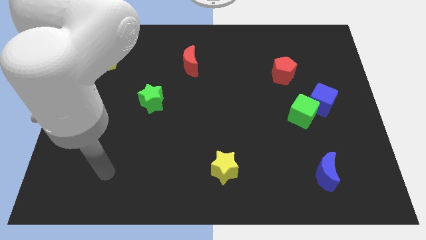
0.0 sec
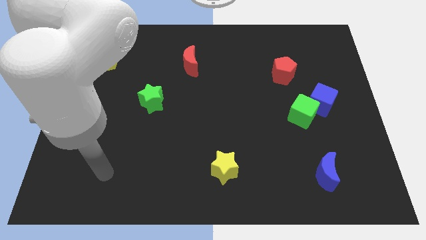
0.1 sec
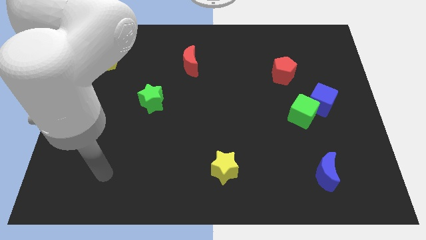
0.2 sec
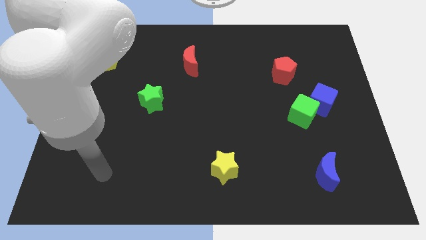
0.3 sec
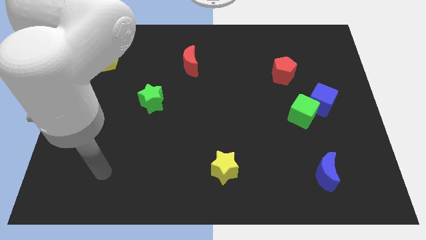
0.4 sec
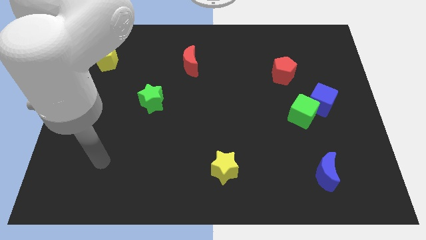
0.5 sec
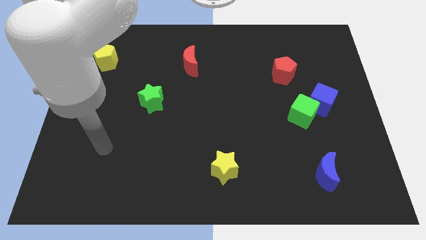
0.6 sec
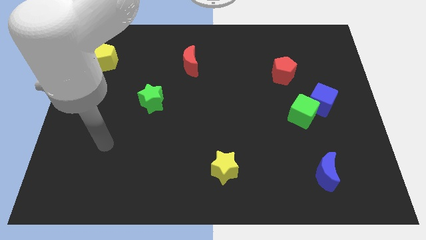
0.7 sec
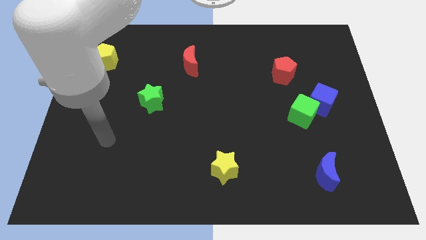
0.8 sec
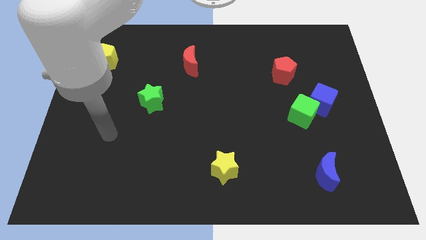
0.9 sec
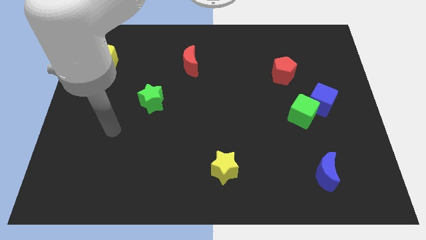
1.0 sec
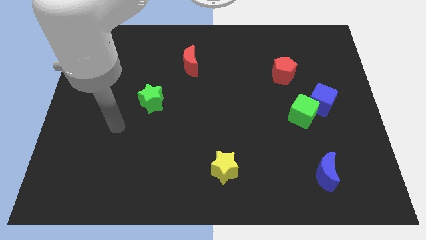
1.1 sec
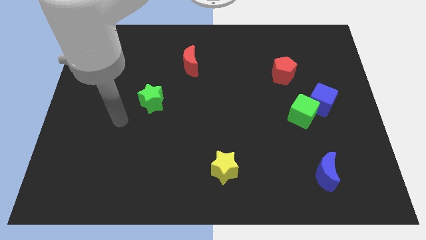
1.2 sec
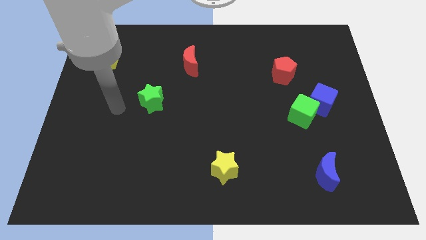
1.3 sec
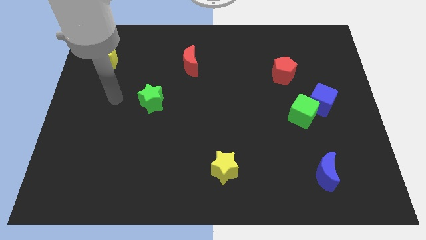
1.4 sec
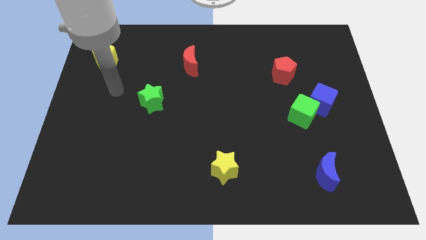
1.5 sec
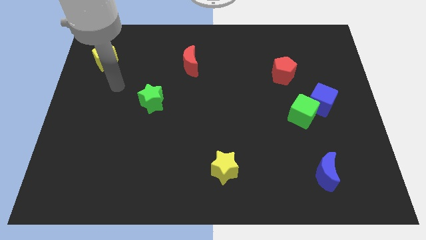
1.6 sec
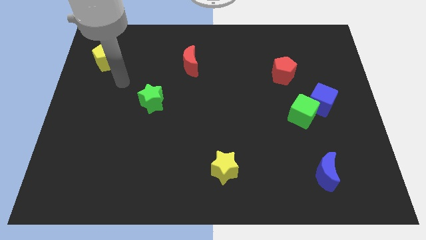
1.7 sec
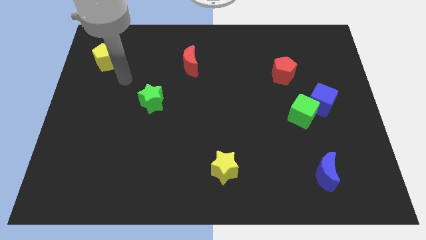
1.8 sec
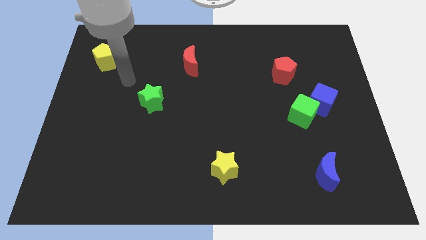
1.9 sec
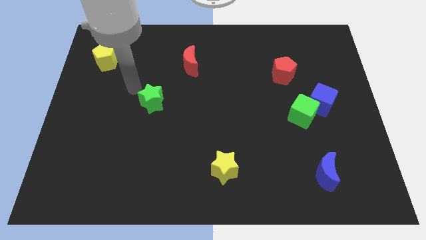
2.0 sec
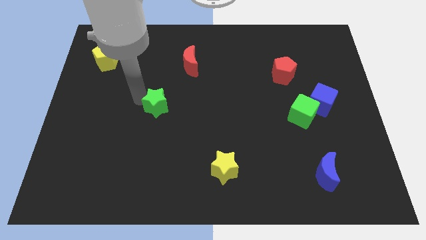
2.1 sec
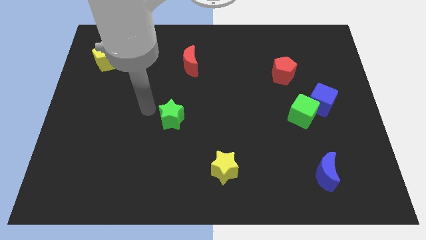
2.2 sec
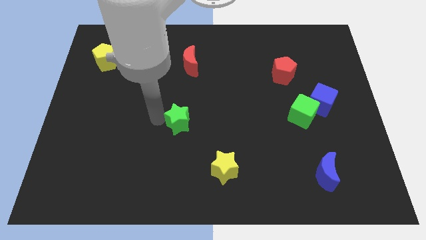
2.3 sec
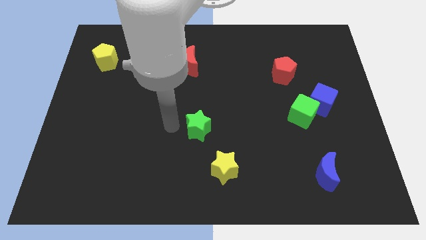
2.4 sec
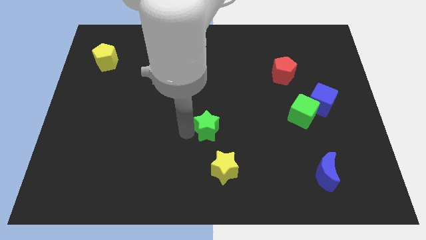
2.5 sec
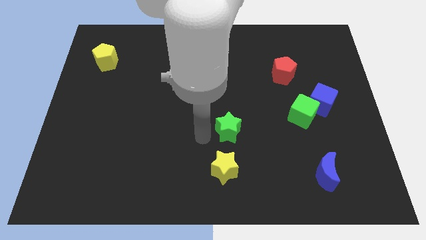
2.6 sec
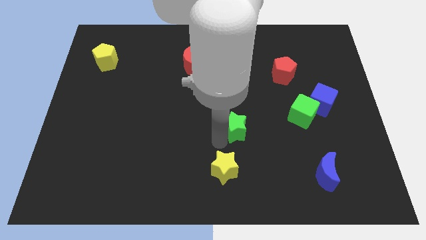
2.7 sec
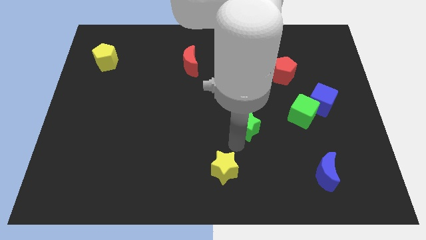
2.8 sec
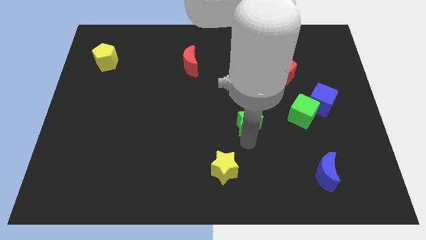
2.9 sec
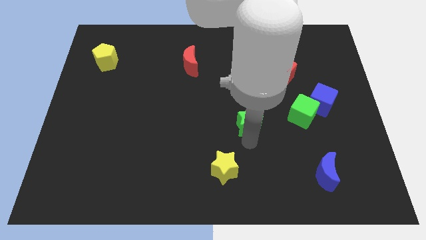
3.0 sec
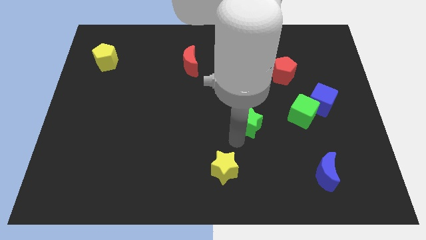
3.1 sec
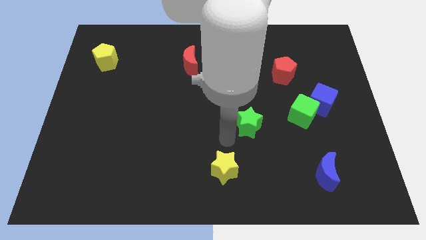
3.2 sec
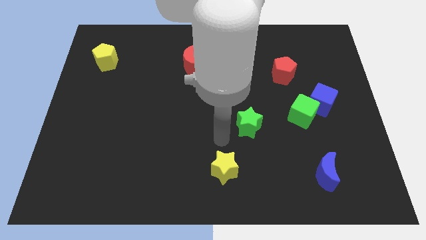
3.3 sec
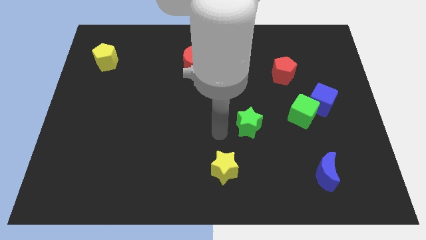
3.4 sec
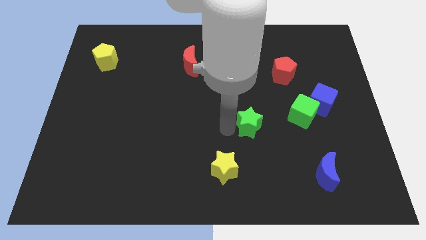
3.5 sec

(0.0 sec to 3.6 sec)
push the green star to the left of the green cube

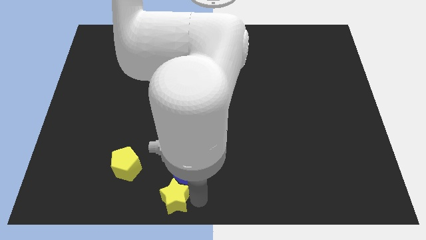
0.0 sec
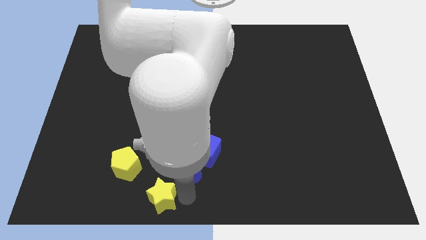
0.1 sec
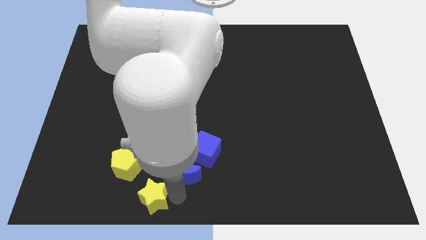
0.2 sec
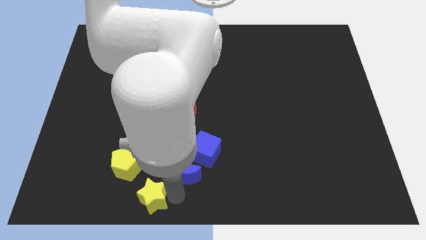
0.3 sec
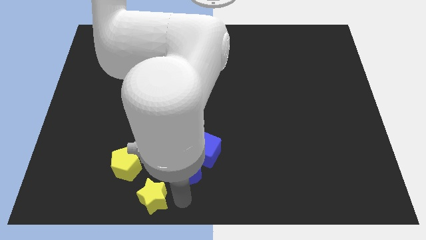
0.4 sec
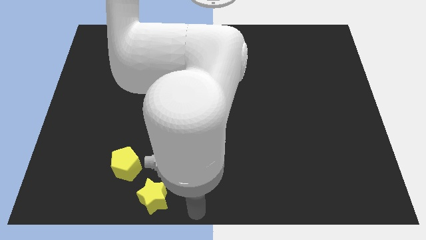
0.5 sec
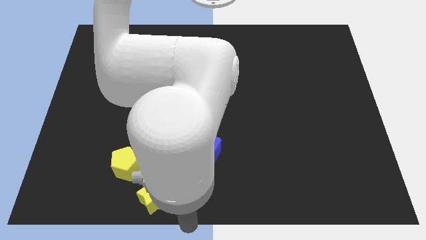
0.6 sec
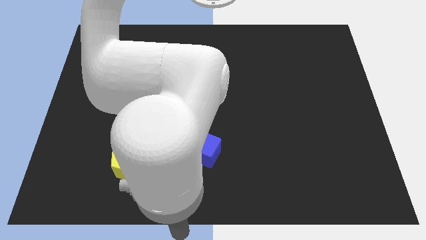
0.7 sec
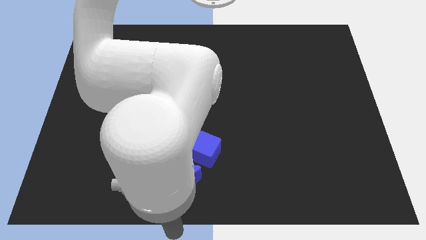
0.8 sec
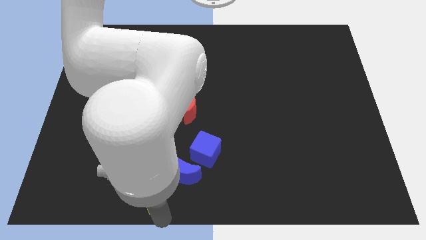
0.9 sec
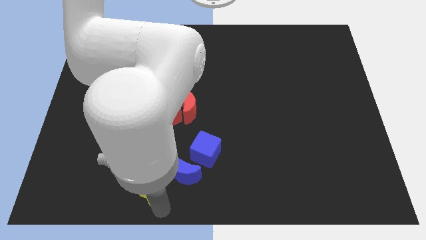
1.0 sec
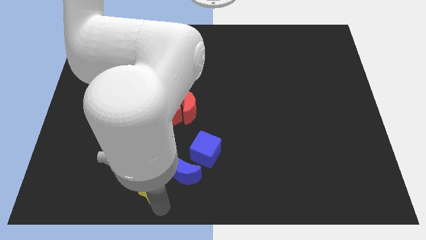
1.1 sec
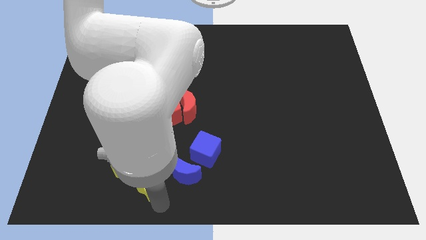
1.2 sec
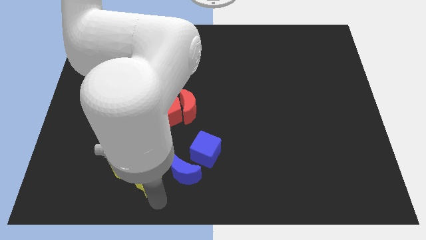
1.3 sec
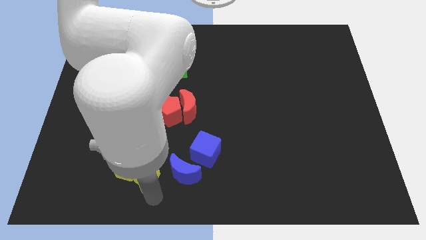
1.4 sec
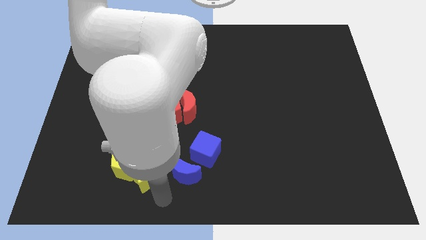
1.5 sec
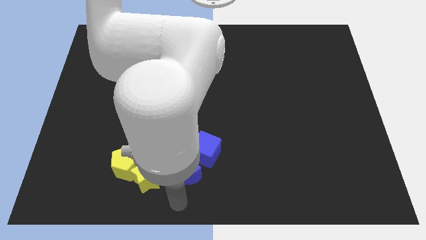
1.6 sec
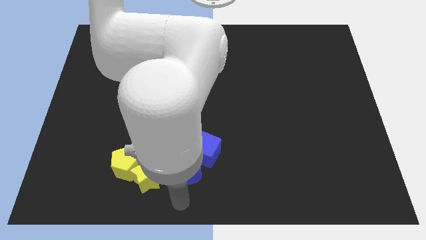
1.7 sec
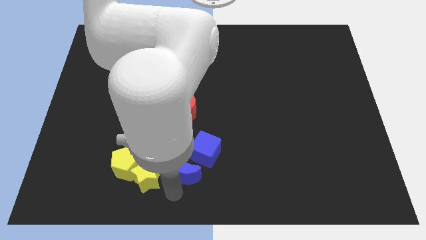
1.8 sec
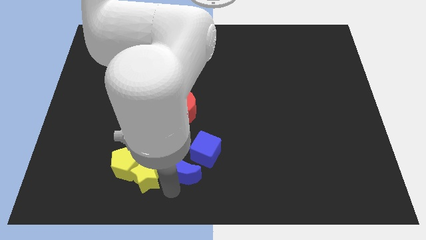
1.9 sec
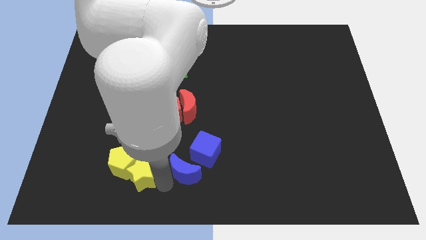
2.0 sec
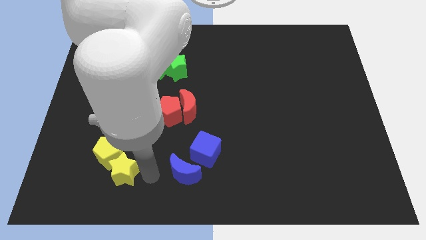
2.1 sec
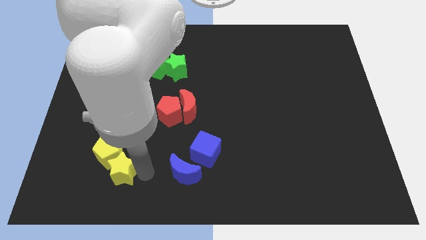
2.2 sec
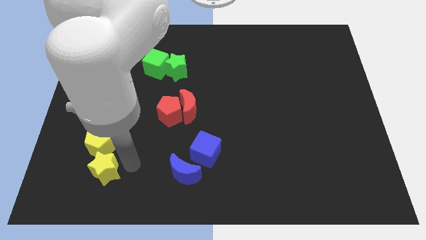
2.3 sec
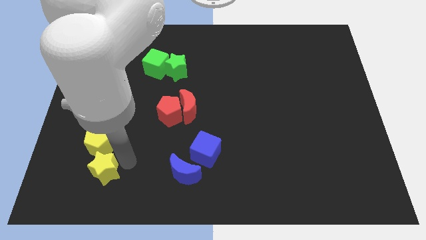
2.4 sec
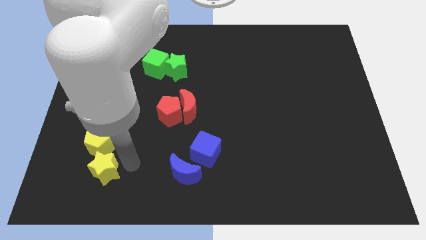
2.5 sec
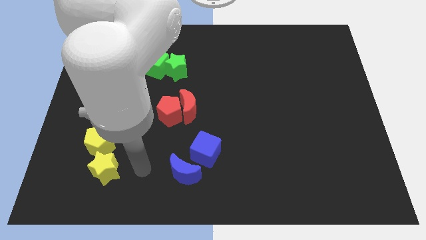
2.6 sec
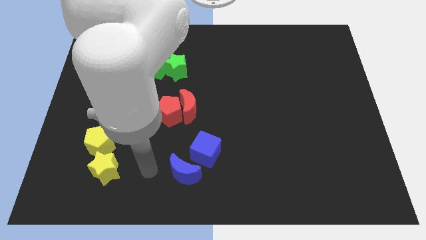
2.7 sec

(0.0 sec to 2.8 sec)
push the yellow star and yellow pentagon together with each other

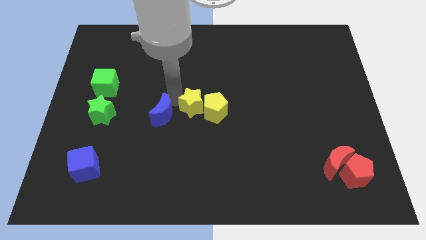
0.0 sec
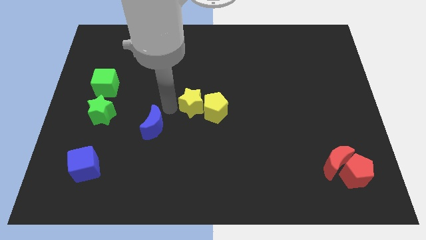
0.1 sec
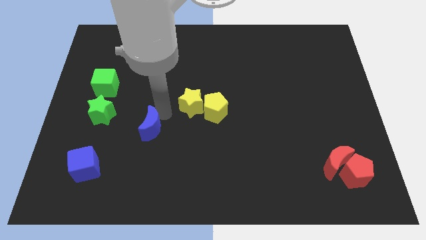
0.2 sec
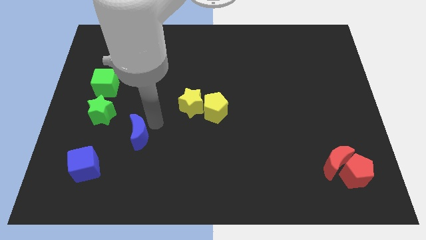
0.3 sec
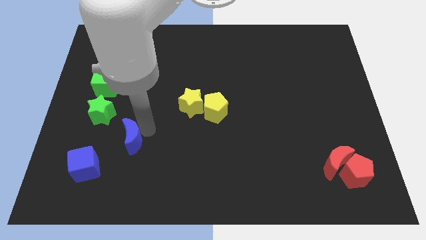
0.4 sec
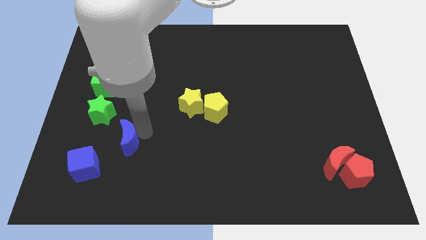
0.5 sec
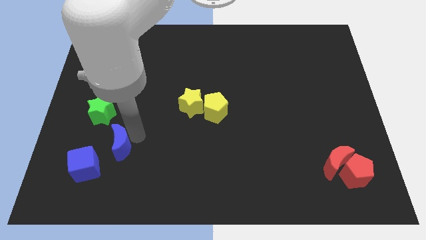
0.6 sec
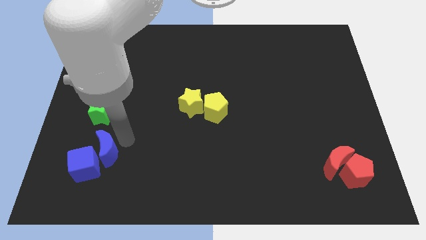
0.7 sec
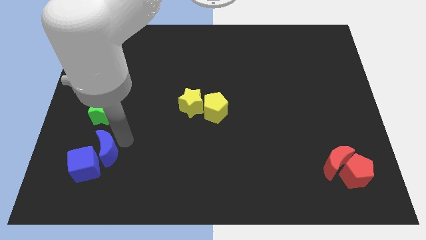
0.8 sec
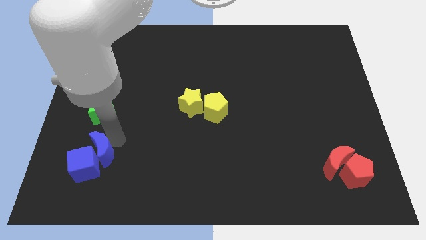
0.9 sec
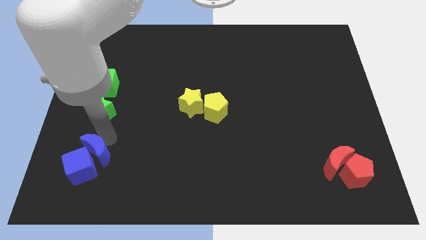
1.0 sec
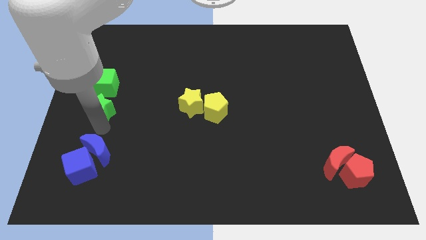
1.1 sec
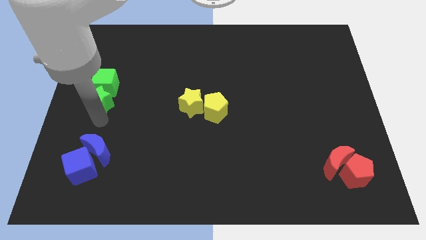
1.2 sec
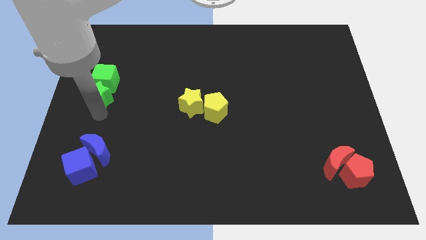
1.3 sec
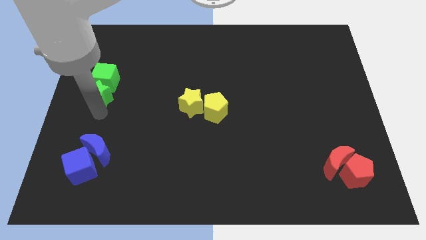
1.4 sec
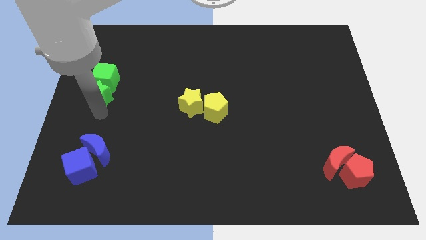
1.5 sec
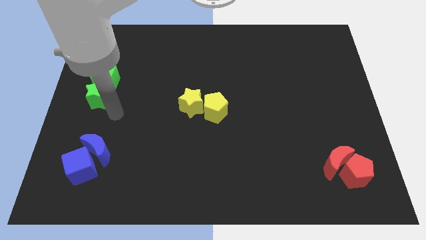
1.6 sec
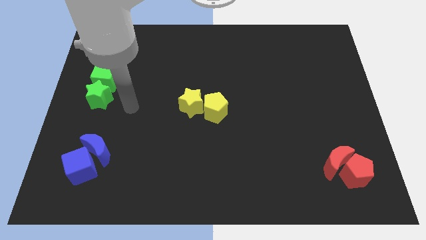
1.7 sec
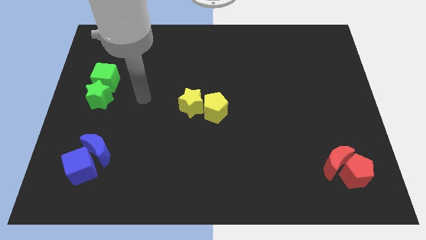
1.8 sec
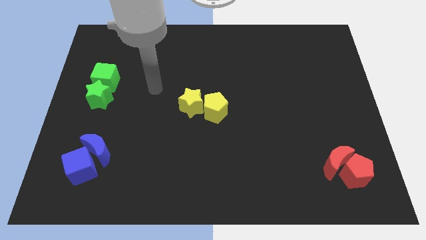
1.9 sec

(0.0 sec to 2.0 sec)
slide the green star towards the bottom of green cube

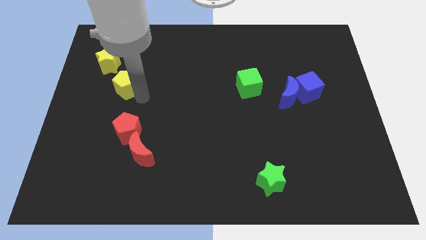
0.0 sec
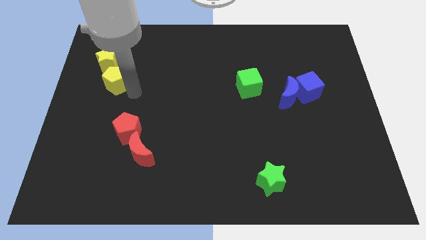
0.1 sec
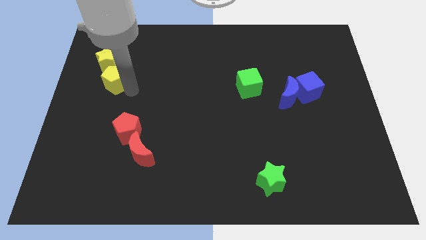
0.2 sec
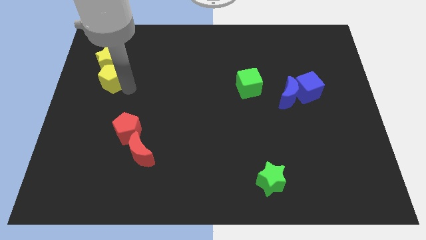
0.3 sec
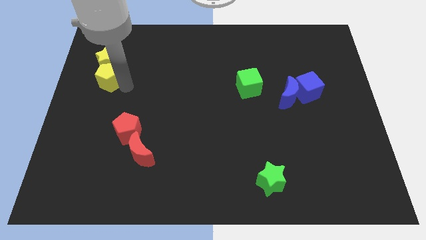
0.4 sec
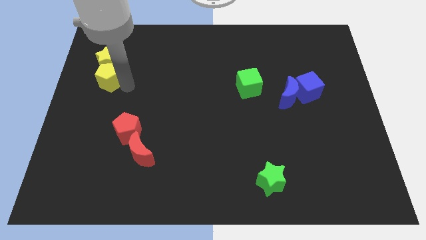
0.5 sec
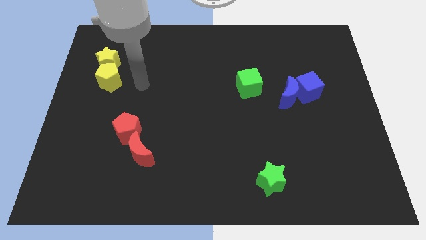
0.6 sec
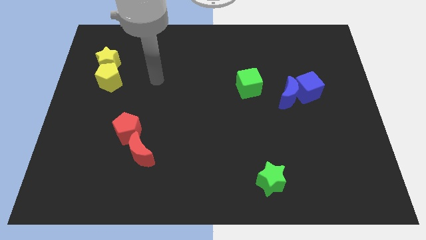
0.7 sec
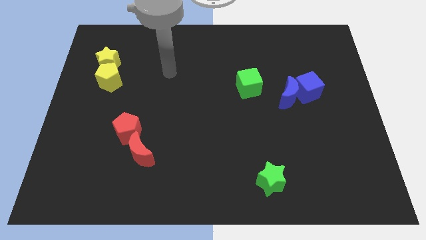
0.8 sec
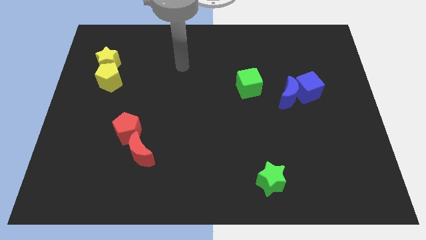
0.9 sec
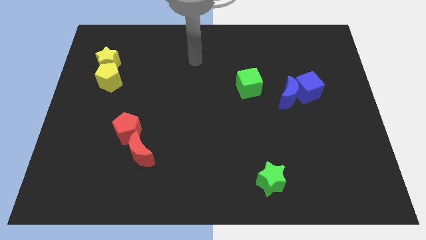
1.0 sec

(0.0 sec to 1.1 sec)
plac ethe yellow pentago at the bottom of the yellow star
